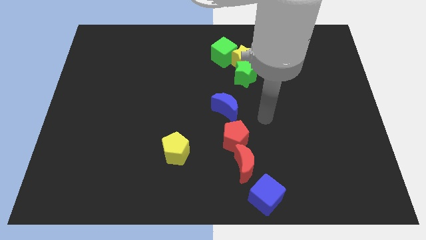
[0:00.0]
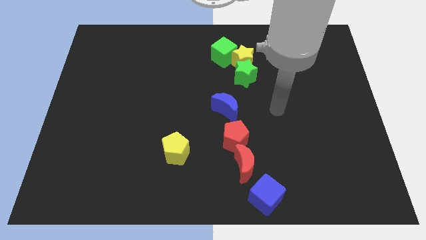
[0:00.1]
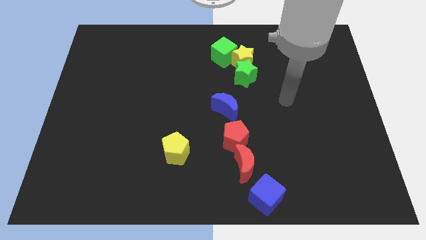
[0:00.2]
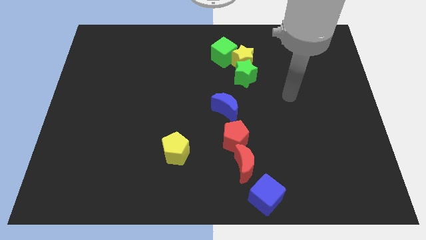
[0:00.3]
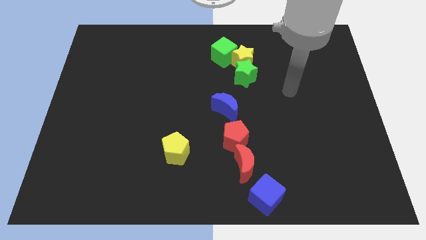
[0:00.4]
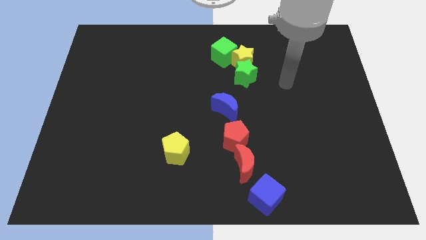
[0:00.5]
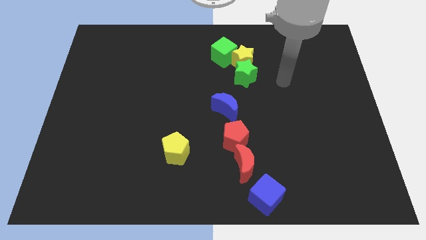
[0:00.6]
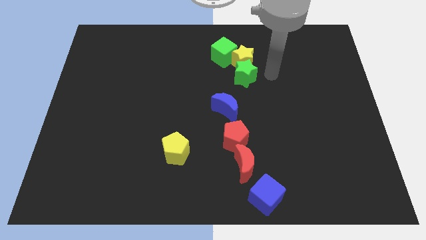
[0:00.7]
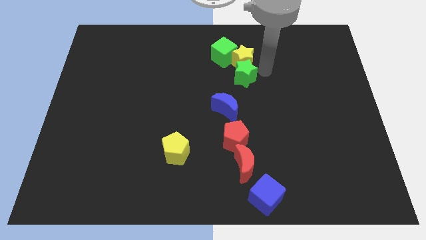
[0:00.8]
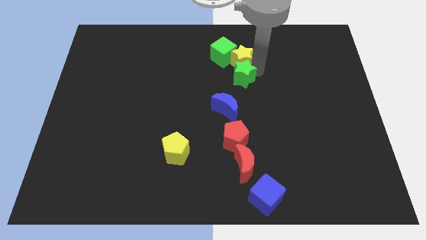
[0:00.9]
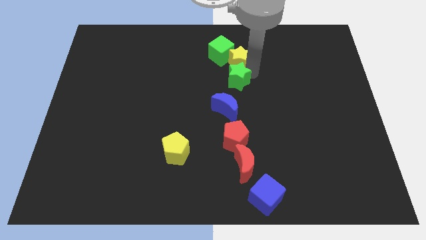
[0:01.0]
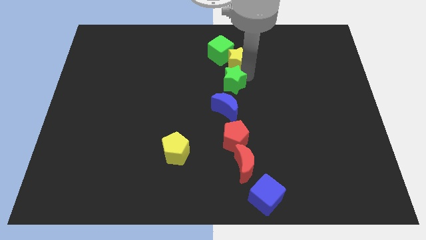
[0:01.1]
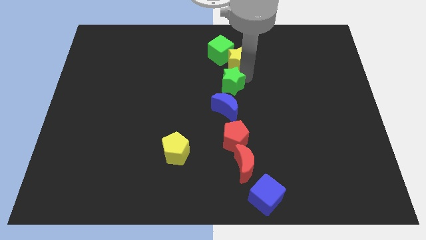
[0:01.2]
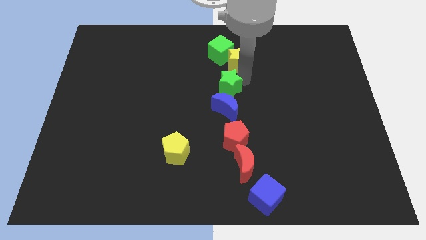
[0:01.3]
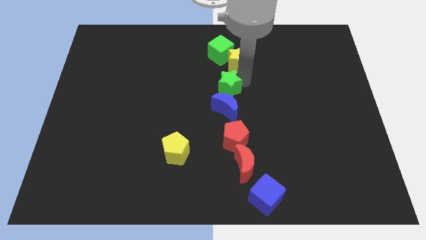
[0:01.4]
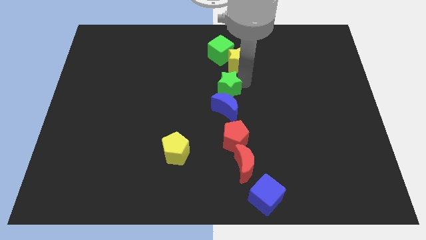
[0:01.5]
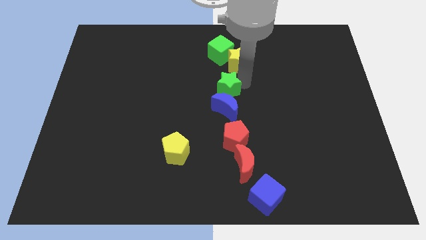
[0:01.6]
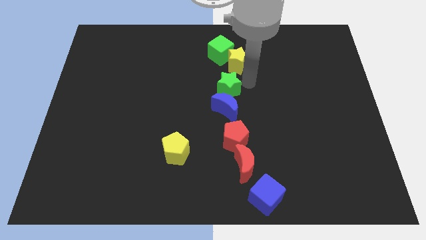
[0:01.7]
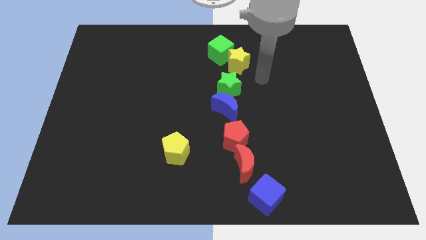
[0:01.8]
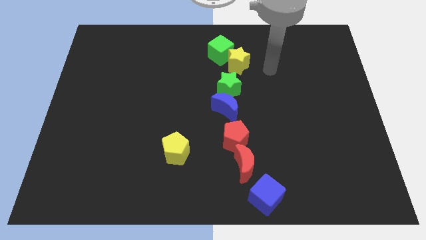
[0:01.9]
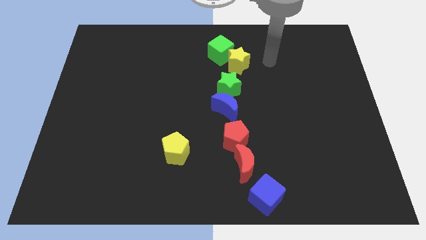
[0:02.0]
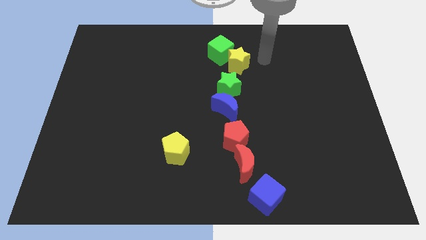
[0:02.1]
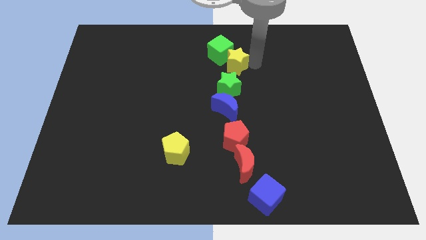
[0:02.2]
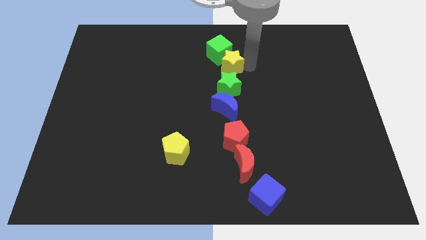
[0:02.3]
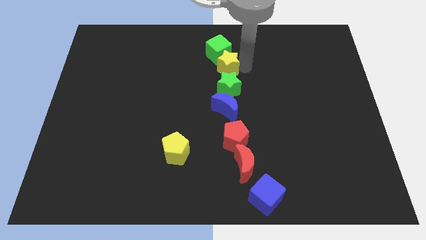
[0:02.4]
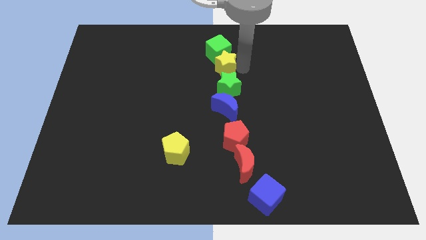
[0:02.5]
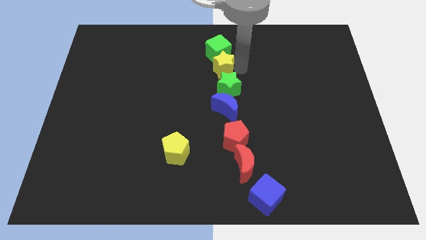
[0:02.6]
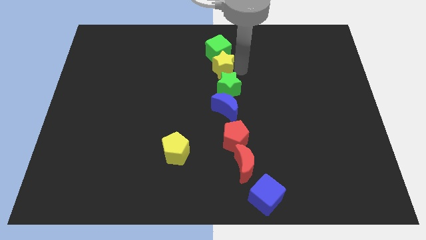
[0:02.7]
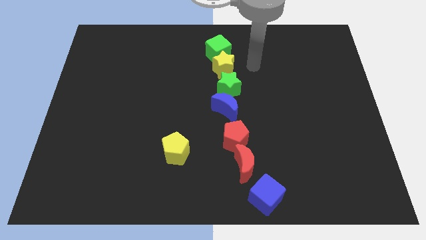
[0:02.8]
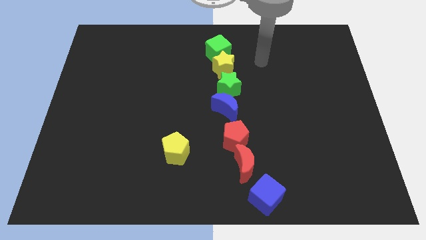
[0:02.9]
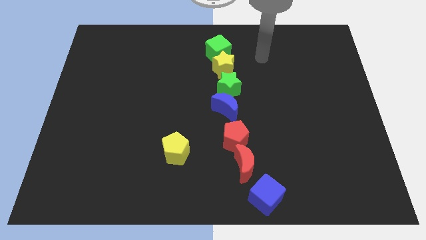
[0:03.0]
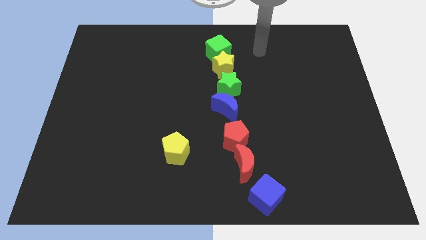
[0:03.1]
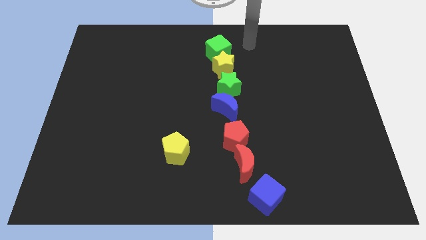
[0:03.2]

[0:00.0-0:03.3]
push the stars above the blue crescent

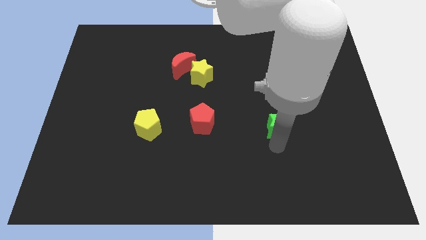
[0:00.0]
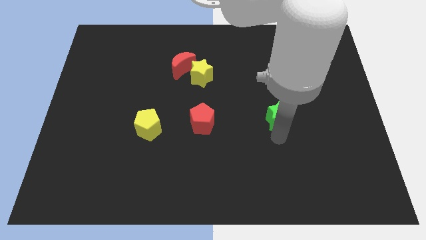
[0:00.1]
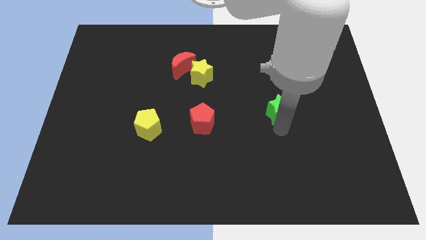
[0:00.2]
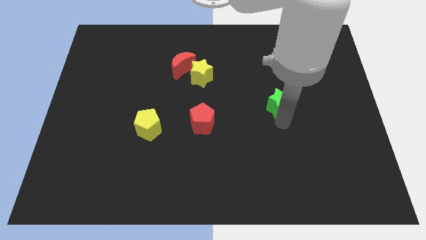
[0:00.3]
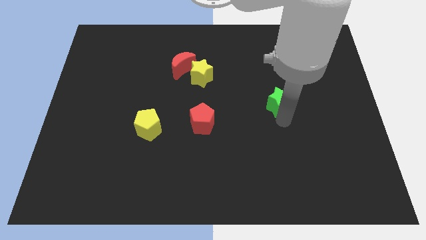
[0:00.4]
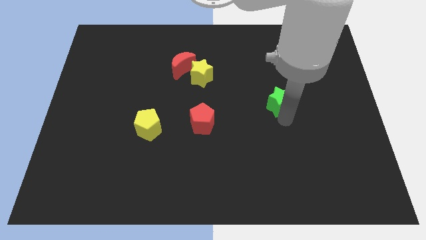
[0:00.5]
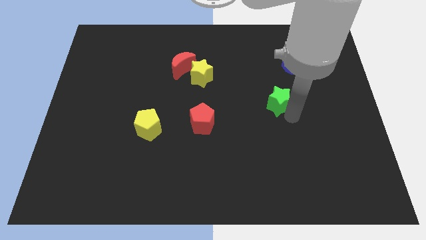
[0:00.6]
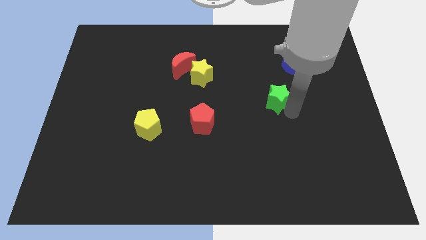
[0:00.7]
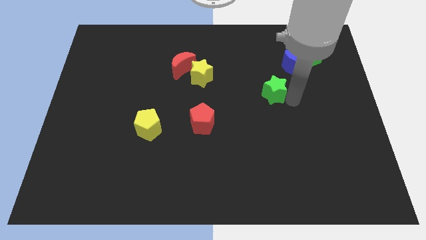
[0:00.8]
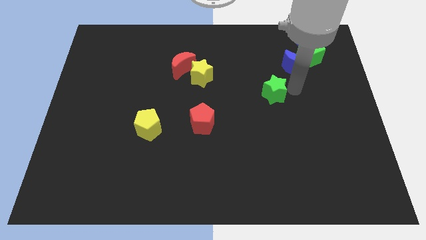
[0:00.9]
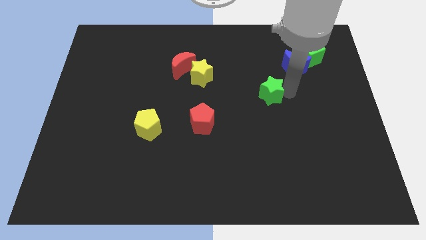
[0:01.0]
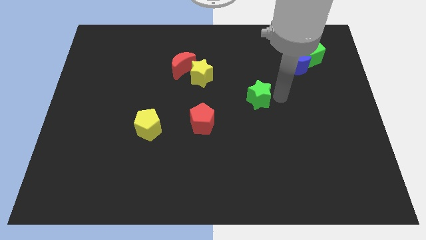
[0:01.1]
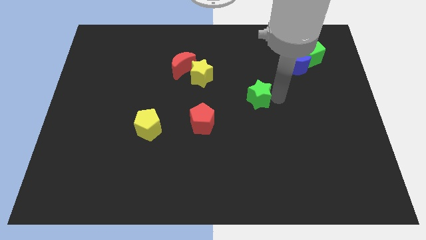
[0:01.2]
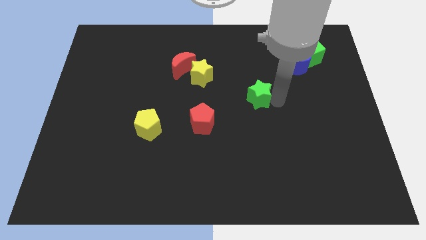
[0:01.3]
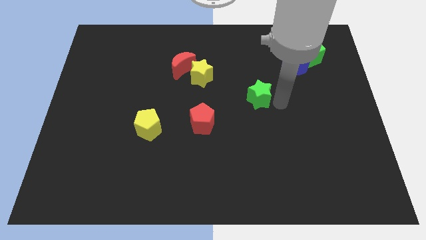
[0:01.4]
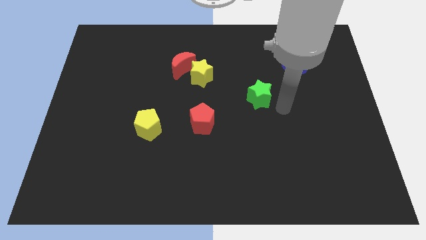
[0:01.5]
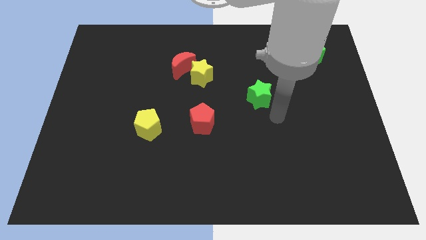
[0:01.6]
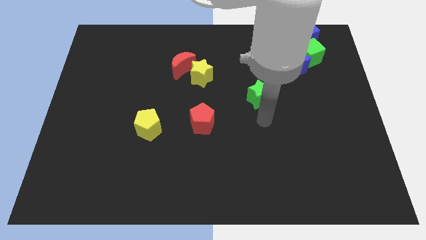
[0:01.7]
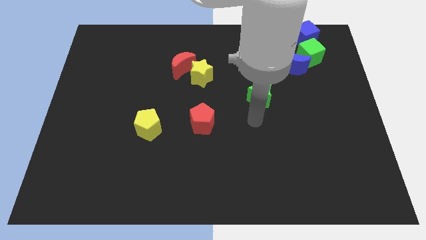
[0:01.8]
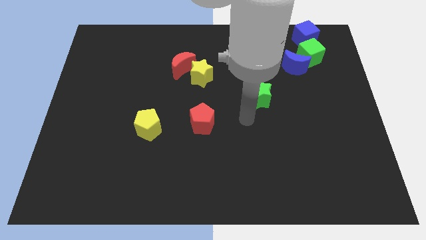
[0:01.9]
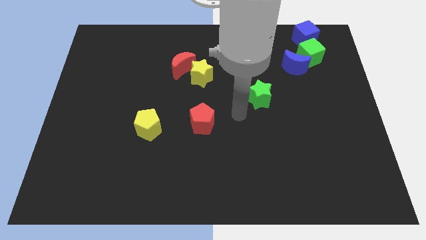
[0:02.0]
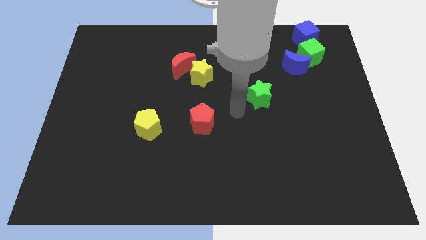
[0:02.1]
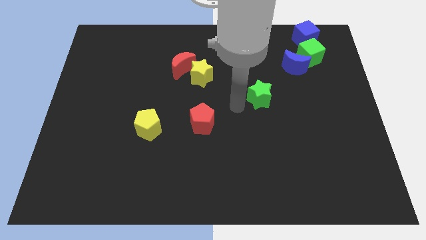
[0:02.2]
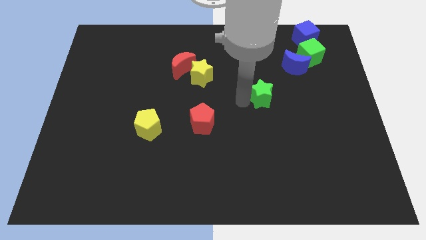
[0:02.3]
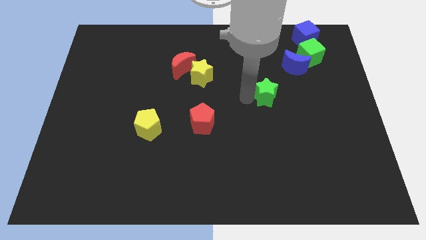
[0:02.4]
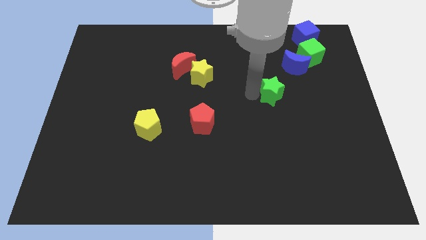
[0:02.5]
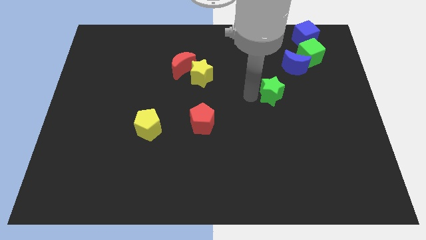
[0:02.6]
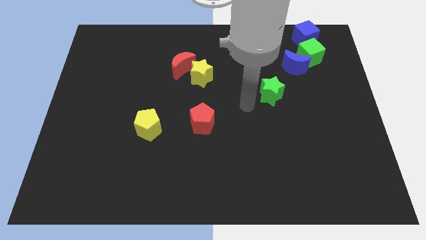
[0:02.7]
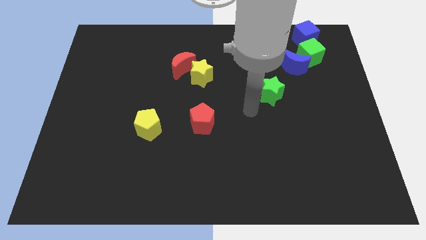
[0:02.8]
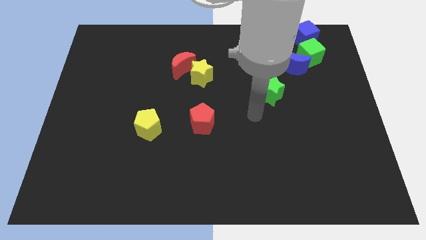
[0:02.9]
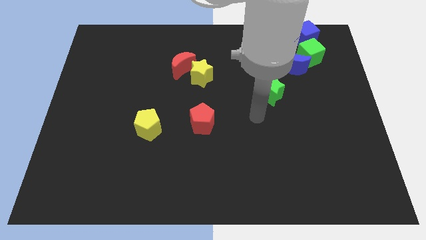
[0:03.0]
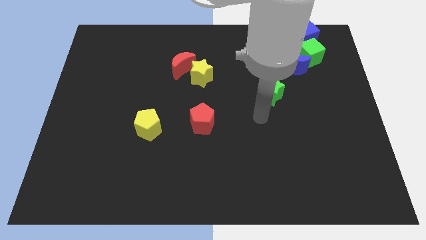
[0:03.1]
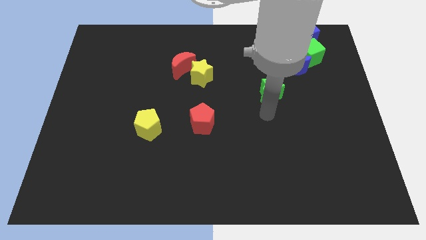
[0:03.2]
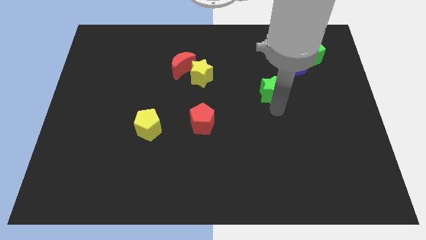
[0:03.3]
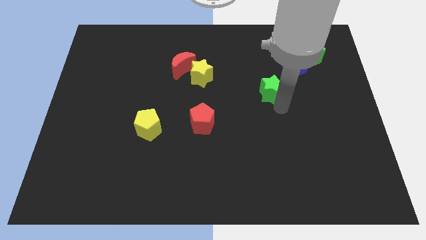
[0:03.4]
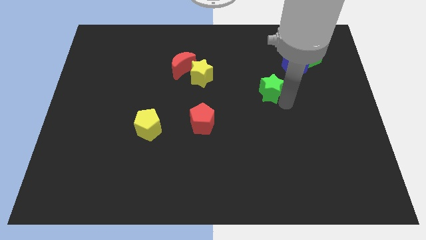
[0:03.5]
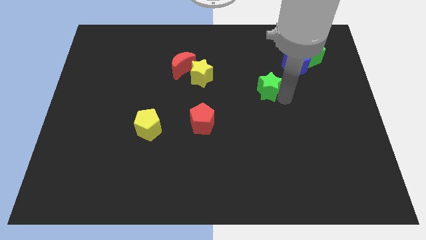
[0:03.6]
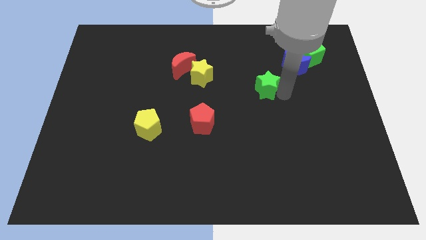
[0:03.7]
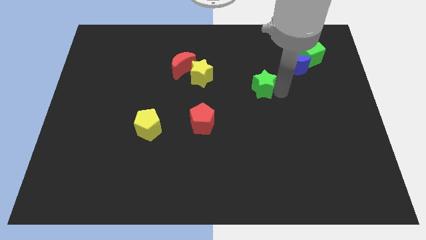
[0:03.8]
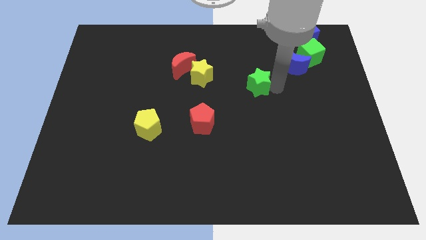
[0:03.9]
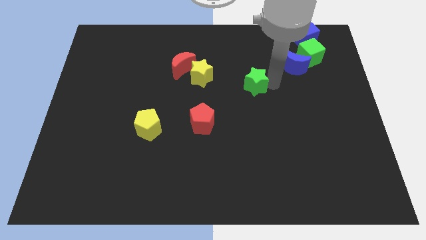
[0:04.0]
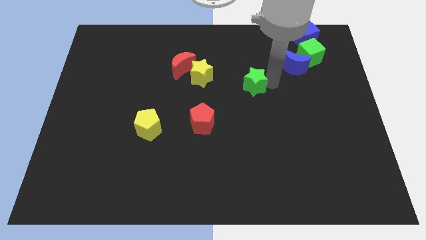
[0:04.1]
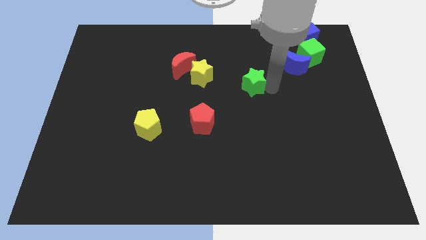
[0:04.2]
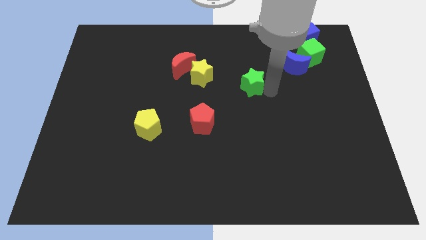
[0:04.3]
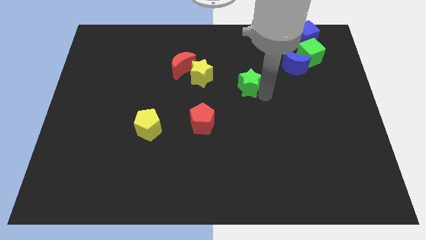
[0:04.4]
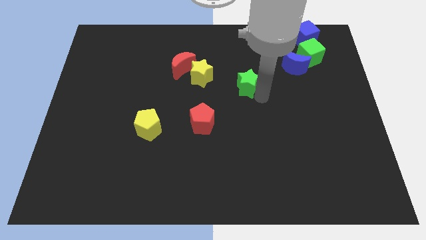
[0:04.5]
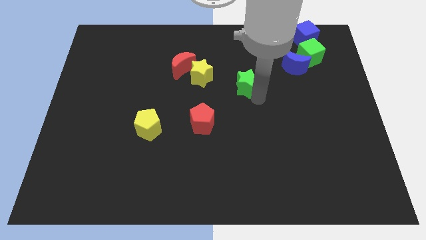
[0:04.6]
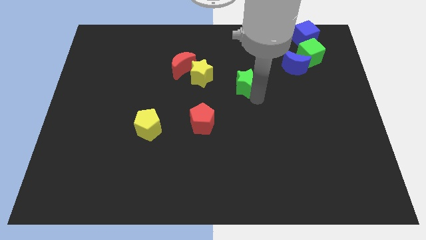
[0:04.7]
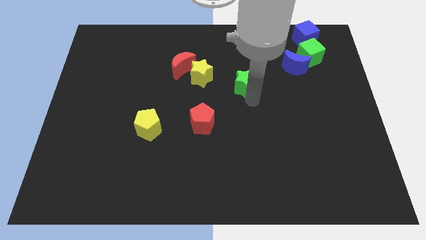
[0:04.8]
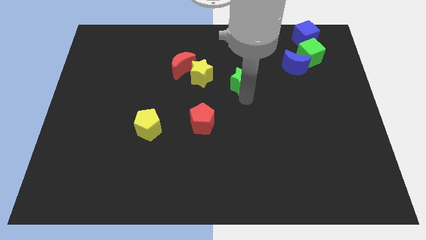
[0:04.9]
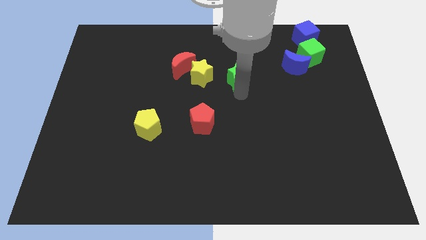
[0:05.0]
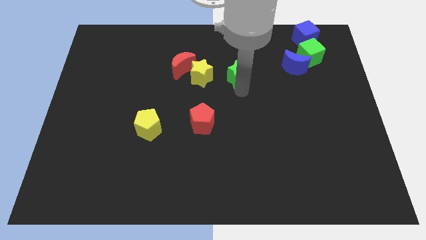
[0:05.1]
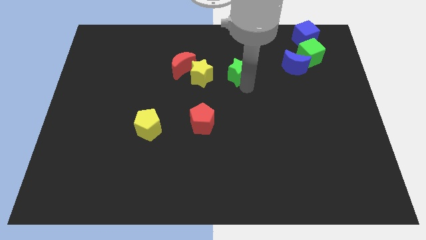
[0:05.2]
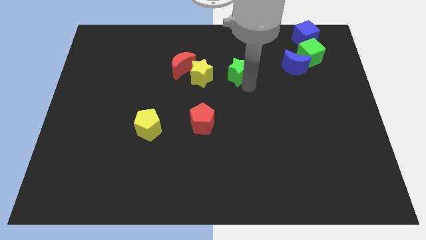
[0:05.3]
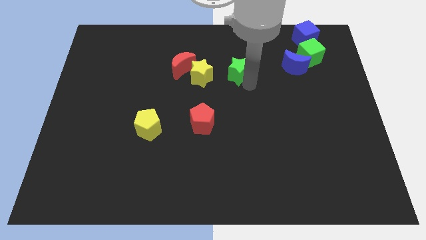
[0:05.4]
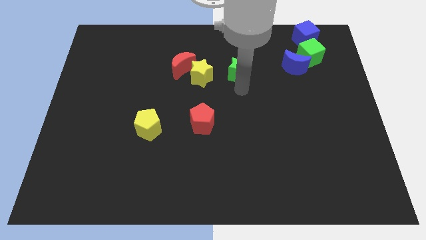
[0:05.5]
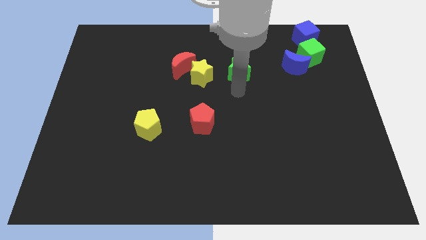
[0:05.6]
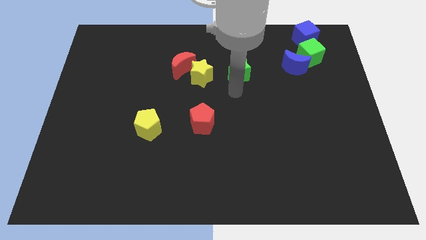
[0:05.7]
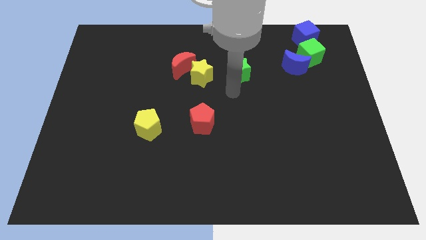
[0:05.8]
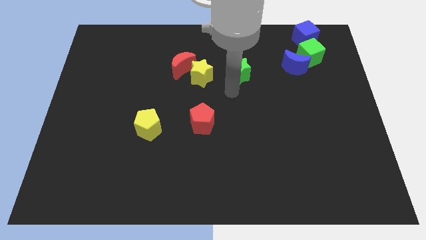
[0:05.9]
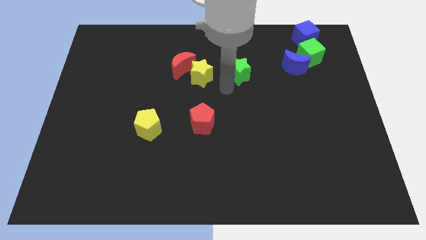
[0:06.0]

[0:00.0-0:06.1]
push the green star to the right of the yellow star
